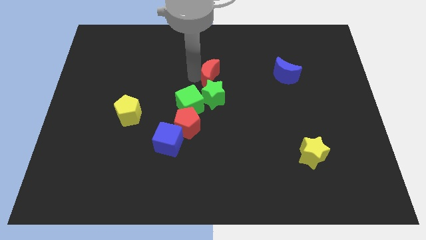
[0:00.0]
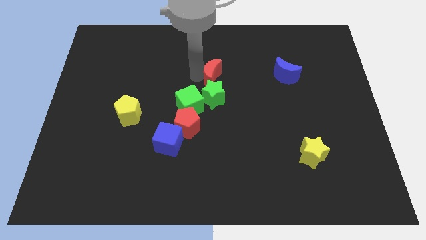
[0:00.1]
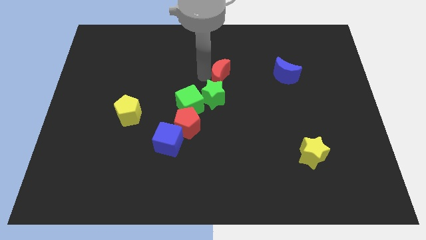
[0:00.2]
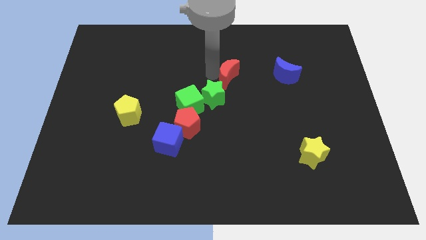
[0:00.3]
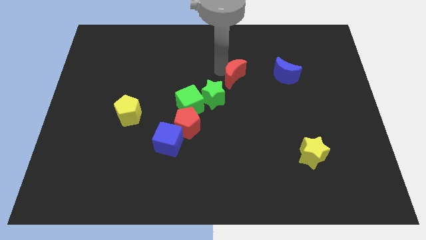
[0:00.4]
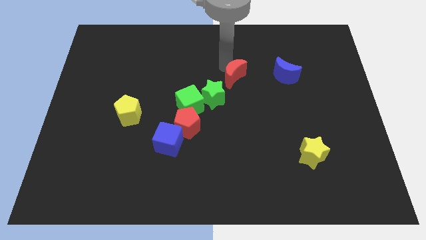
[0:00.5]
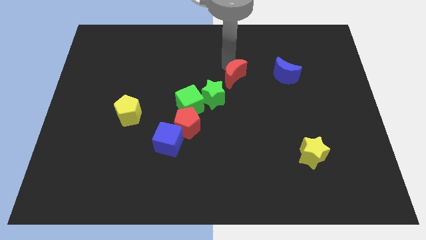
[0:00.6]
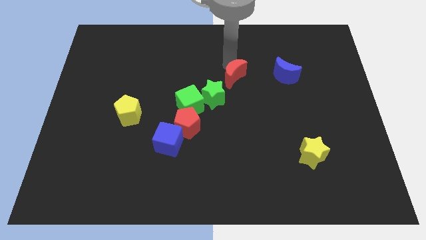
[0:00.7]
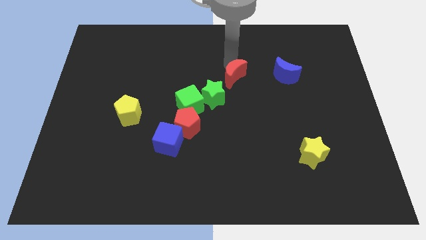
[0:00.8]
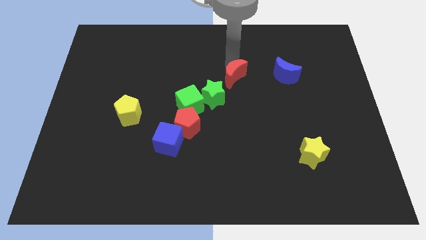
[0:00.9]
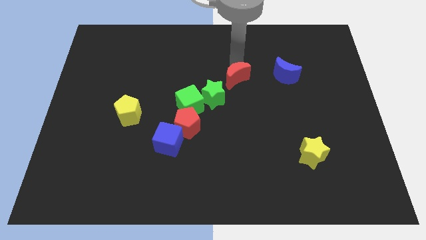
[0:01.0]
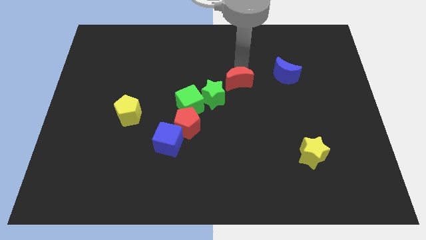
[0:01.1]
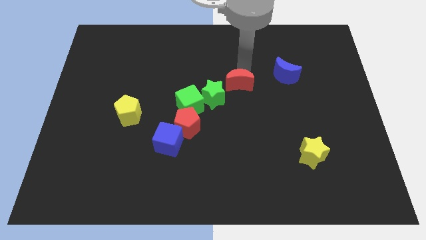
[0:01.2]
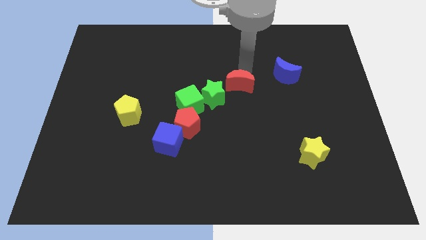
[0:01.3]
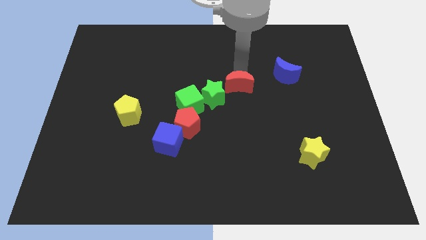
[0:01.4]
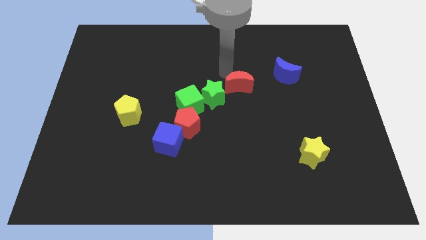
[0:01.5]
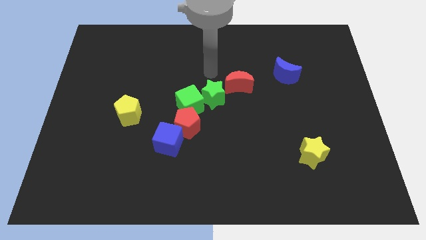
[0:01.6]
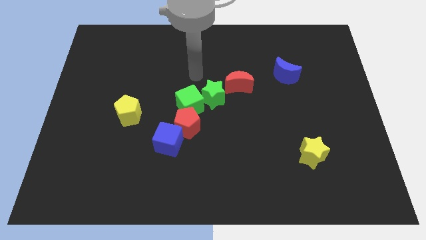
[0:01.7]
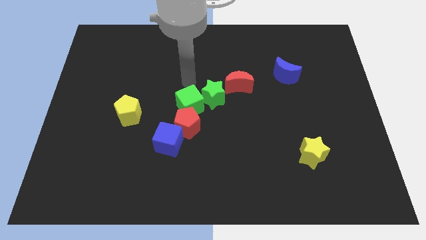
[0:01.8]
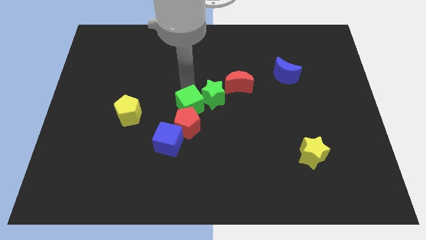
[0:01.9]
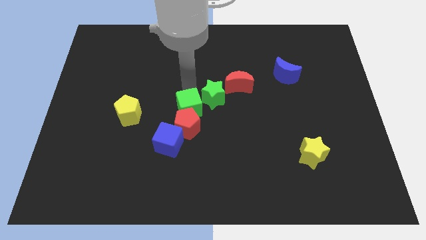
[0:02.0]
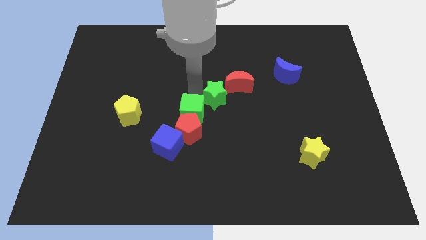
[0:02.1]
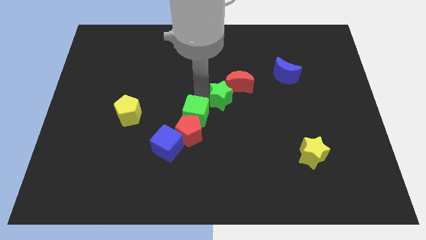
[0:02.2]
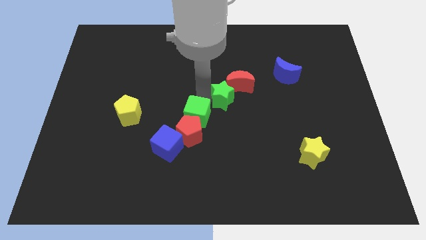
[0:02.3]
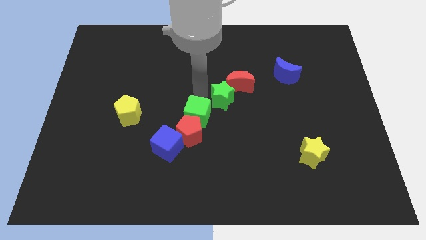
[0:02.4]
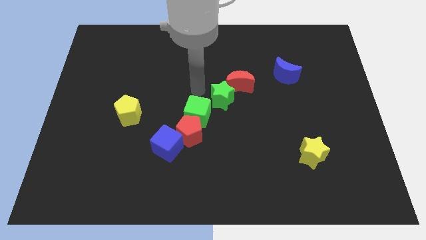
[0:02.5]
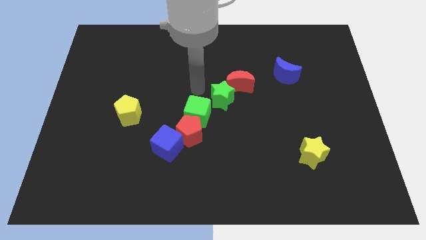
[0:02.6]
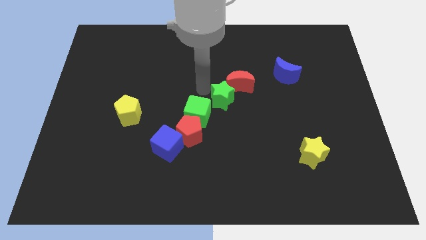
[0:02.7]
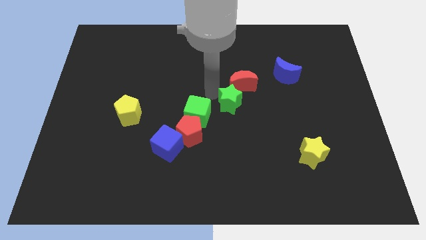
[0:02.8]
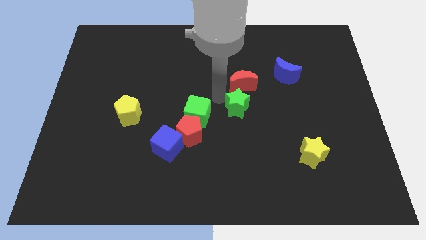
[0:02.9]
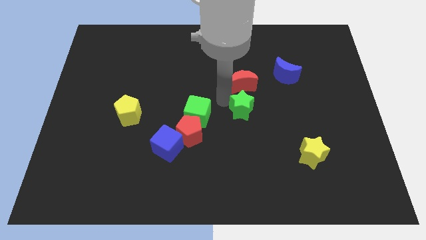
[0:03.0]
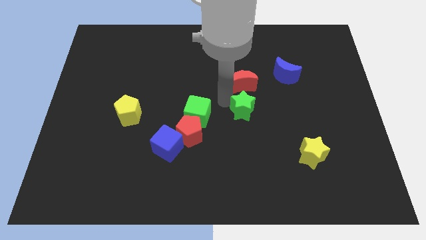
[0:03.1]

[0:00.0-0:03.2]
separate the green cube and green star

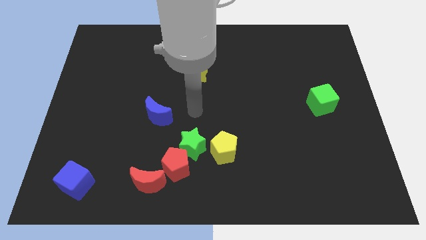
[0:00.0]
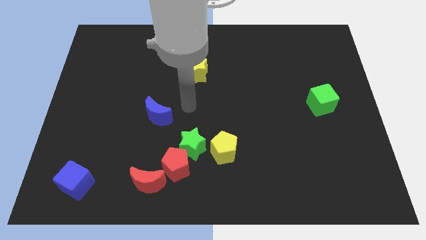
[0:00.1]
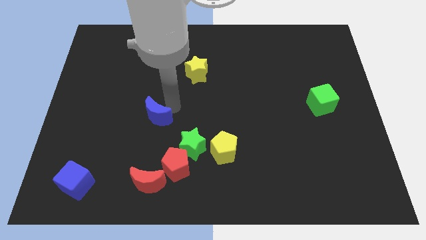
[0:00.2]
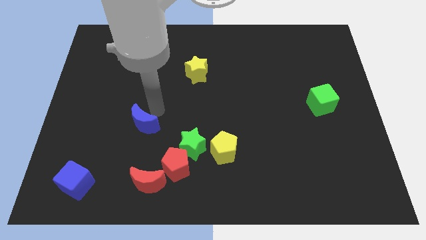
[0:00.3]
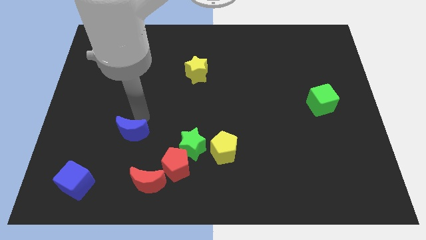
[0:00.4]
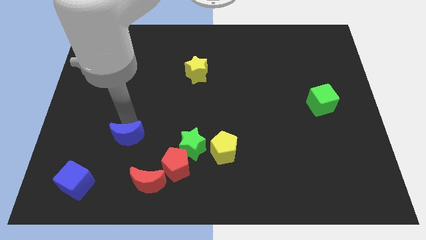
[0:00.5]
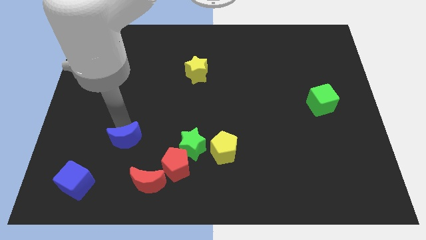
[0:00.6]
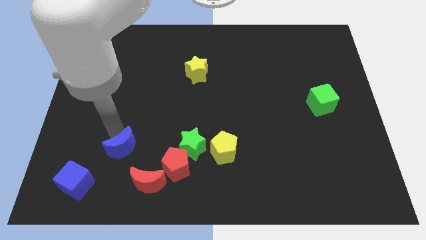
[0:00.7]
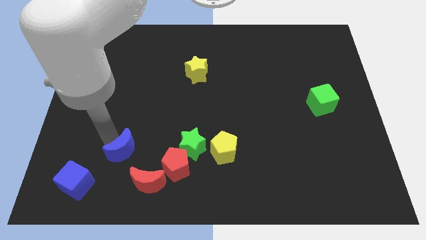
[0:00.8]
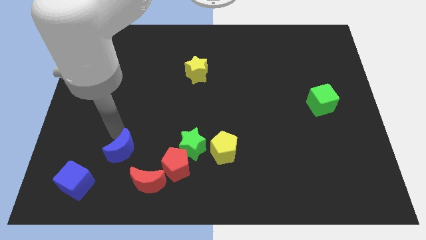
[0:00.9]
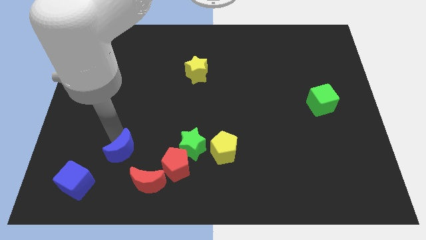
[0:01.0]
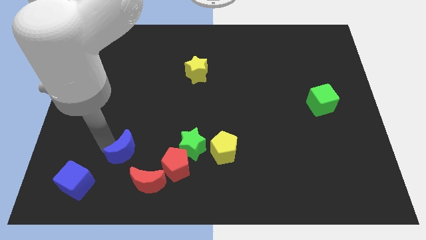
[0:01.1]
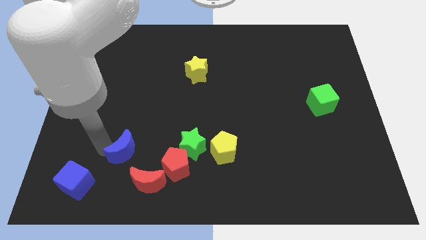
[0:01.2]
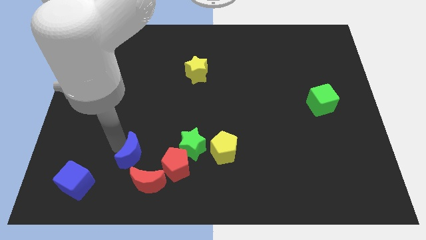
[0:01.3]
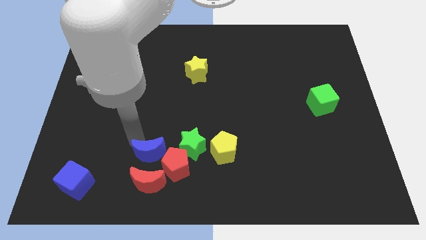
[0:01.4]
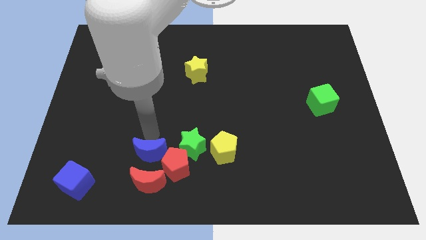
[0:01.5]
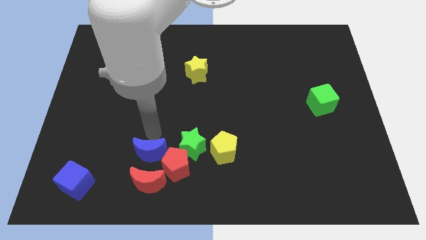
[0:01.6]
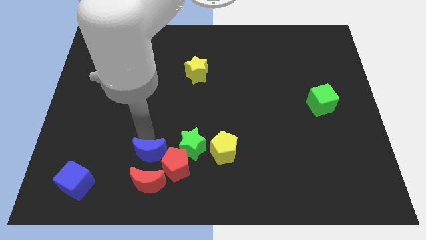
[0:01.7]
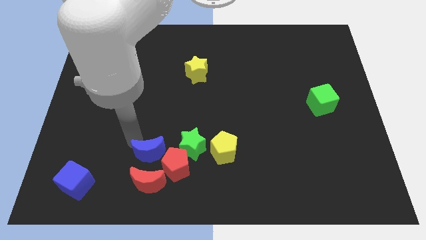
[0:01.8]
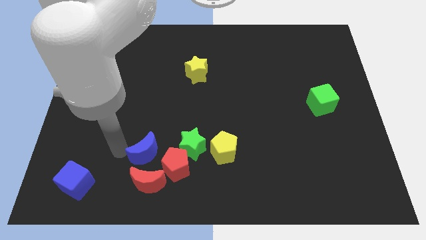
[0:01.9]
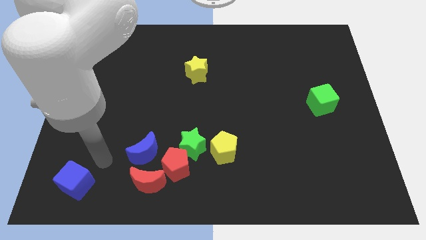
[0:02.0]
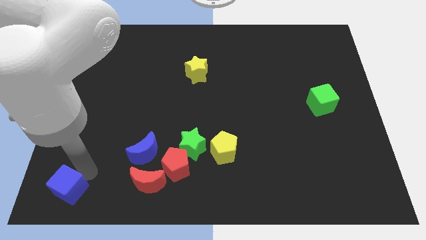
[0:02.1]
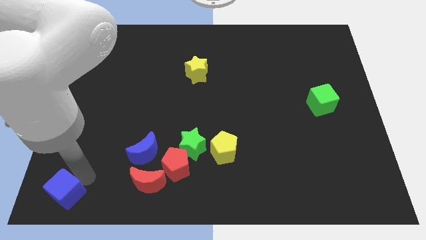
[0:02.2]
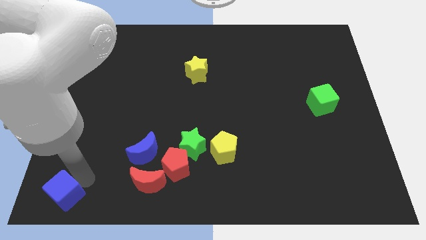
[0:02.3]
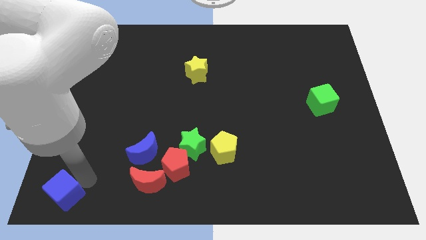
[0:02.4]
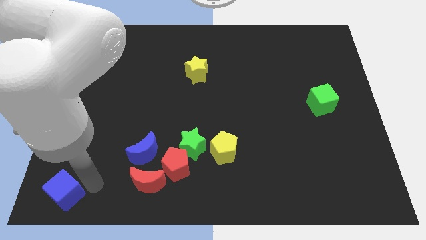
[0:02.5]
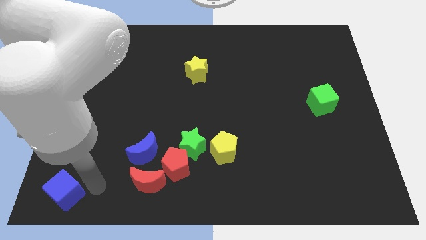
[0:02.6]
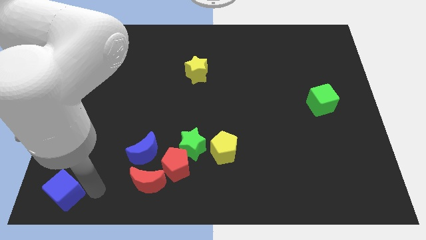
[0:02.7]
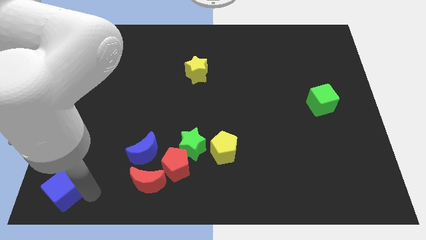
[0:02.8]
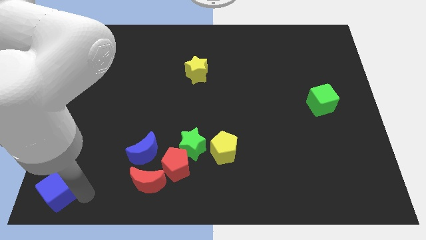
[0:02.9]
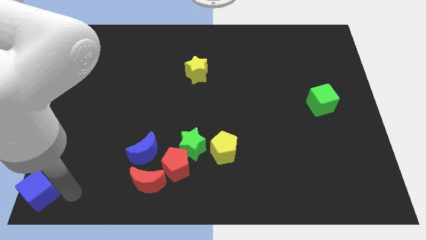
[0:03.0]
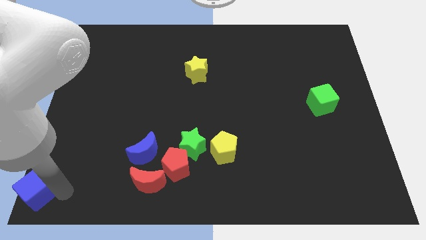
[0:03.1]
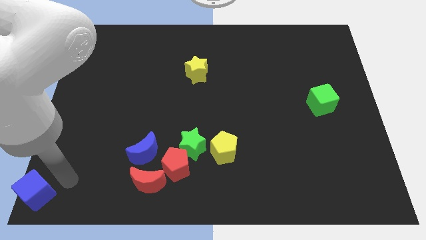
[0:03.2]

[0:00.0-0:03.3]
move the blue crescent to the top of the red crescent

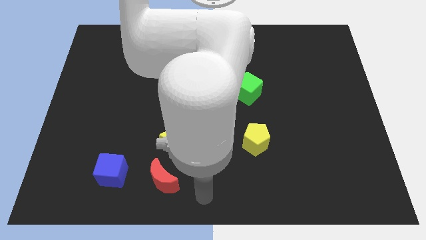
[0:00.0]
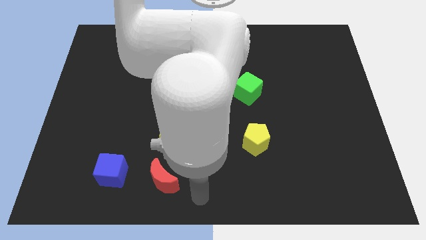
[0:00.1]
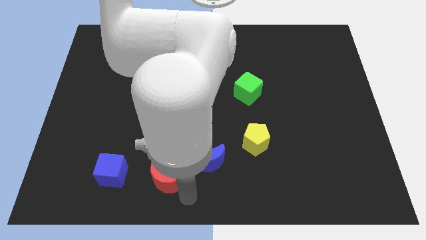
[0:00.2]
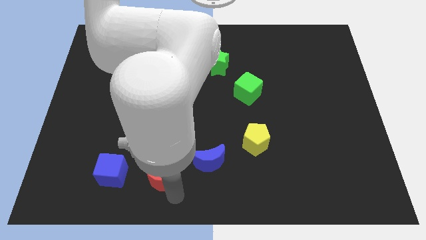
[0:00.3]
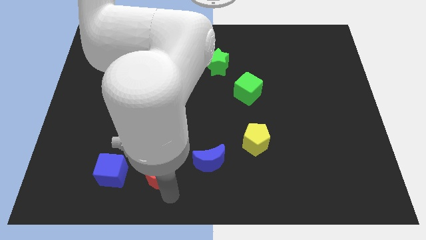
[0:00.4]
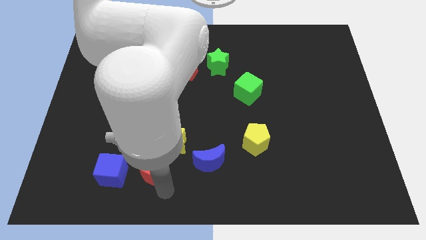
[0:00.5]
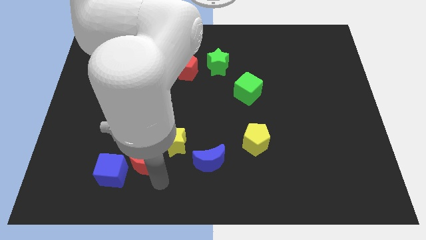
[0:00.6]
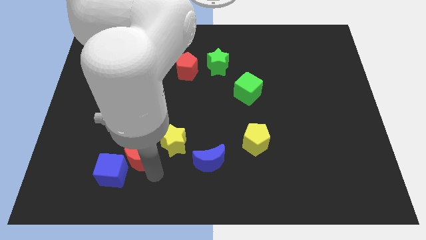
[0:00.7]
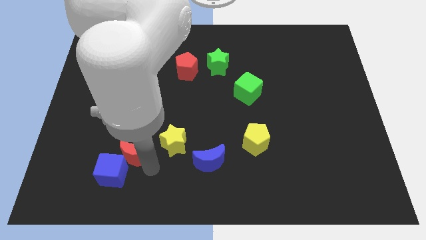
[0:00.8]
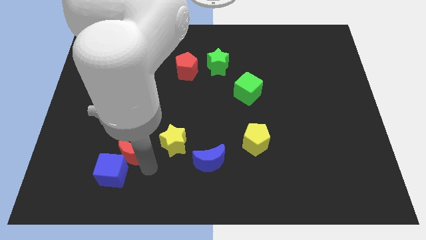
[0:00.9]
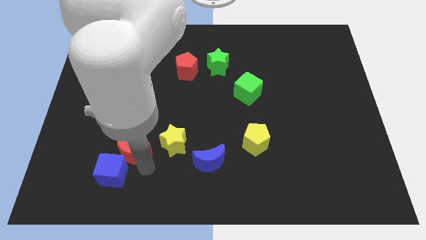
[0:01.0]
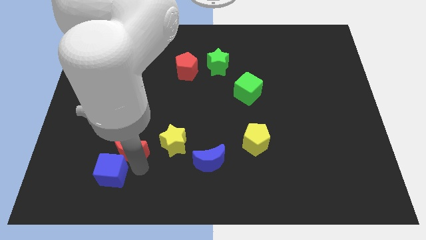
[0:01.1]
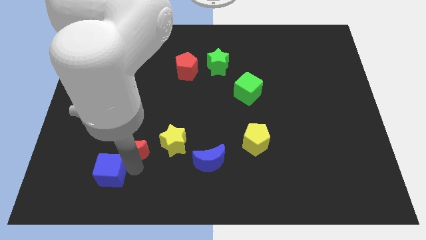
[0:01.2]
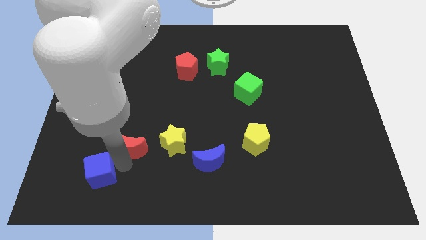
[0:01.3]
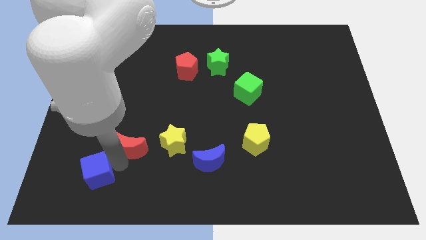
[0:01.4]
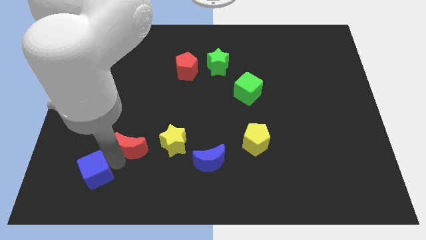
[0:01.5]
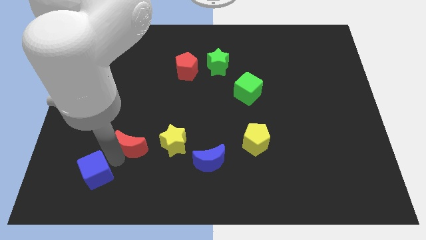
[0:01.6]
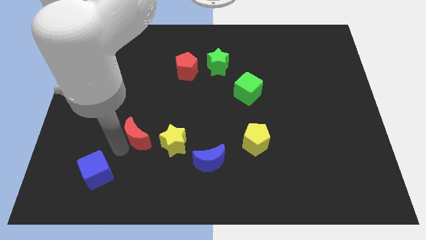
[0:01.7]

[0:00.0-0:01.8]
place your hand in between the red moon and blue cube

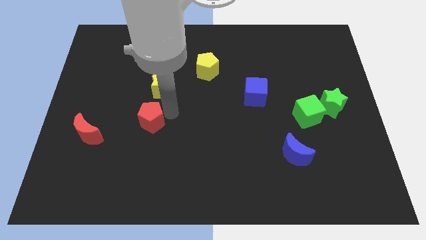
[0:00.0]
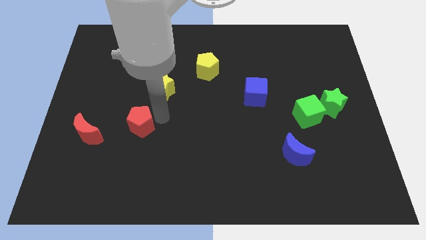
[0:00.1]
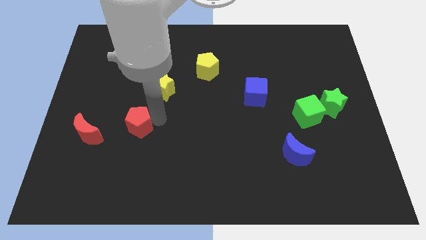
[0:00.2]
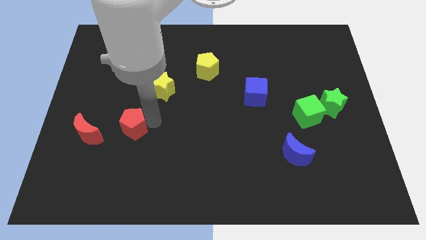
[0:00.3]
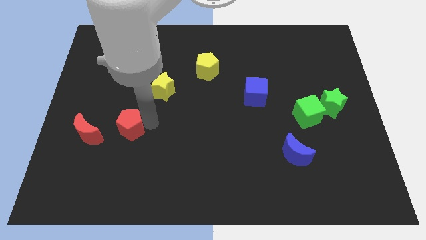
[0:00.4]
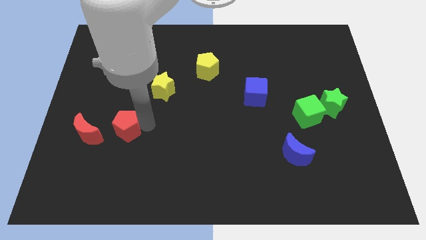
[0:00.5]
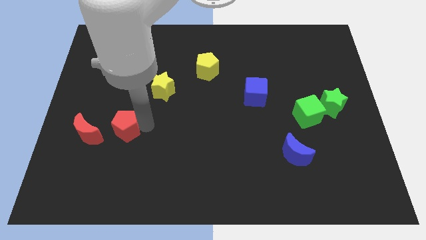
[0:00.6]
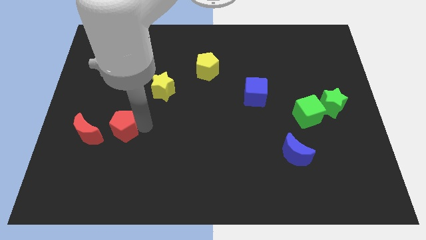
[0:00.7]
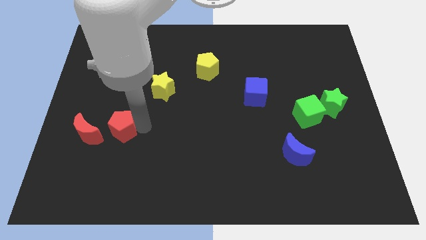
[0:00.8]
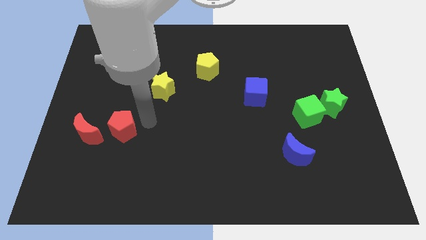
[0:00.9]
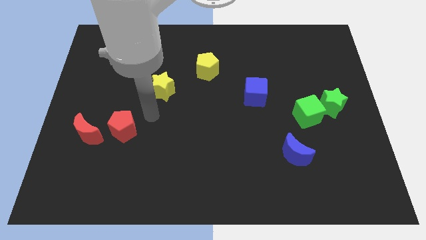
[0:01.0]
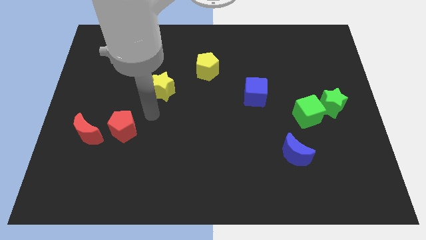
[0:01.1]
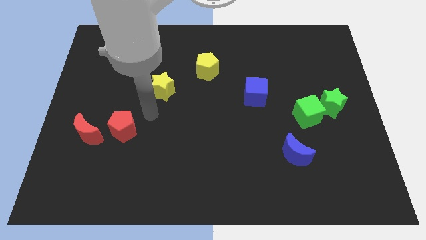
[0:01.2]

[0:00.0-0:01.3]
push red pentagon towards red moon
